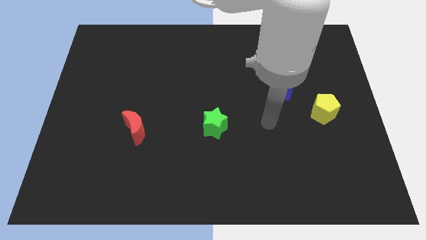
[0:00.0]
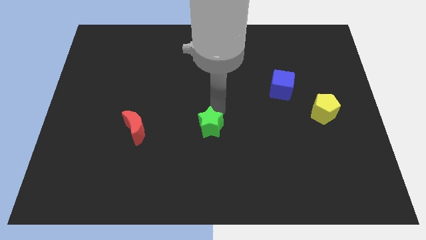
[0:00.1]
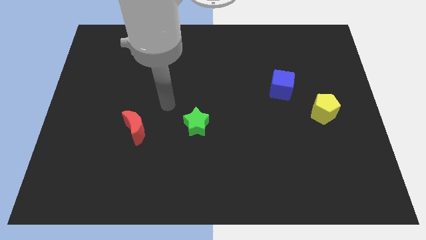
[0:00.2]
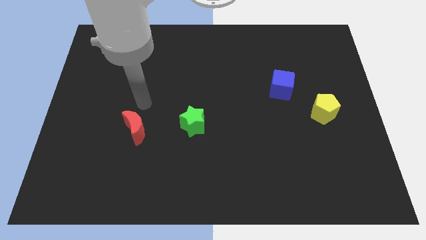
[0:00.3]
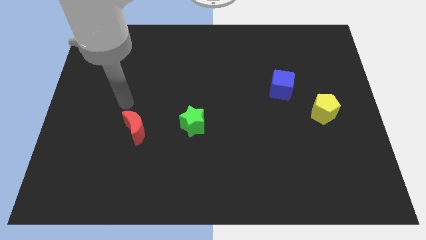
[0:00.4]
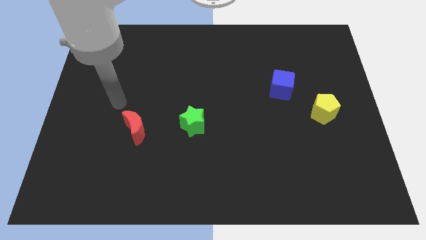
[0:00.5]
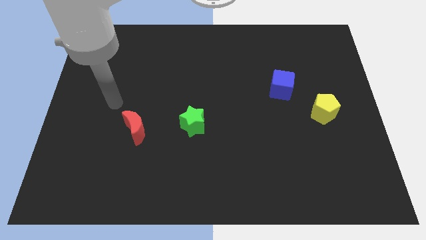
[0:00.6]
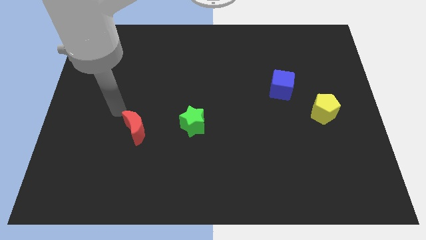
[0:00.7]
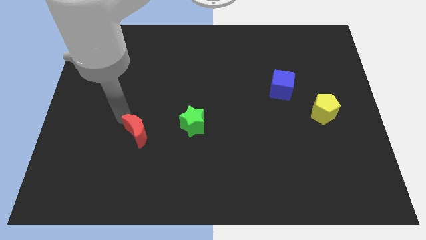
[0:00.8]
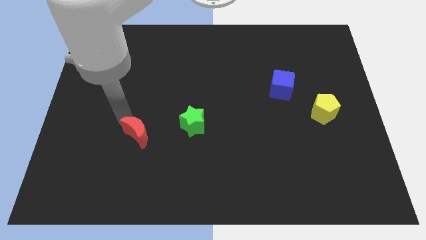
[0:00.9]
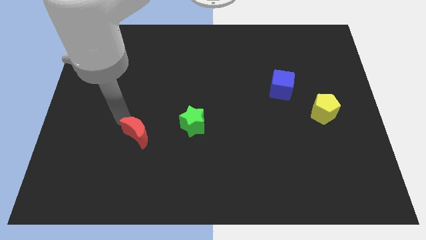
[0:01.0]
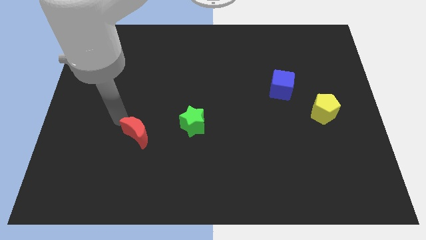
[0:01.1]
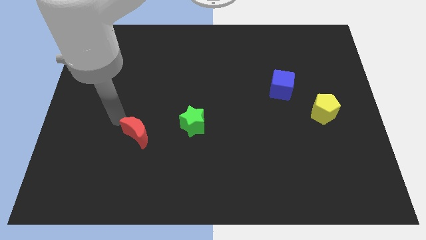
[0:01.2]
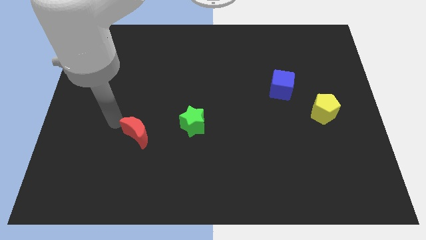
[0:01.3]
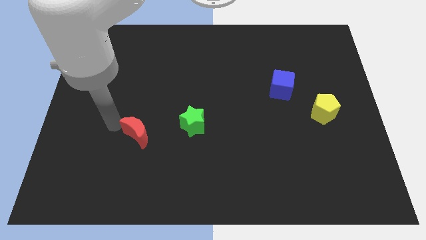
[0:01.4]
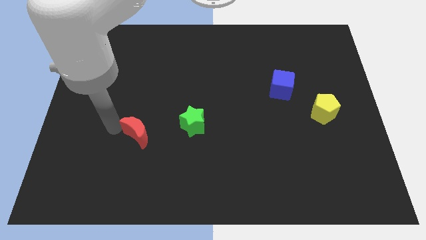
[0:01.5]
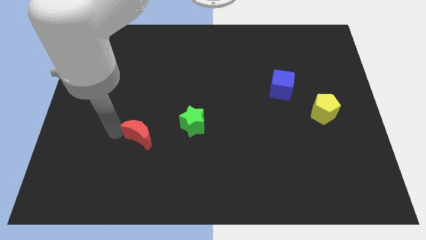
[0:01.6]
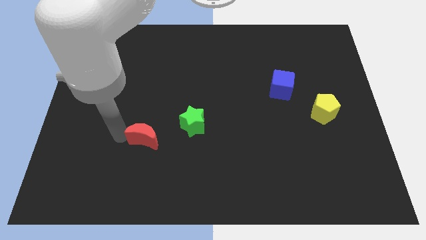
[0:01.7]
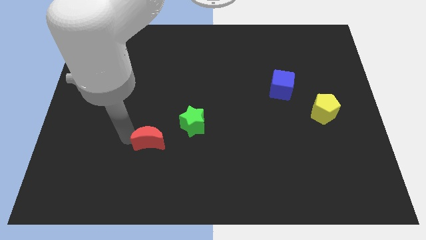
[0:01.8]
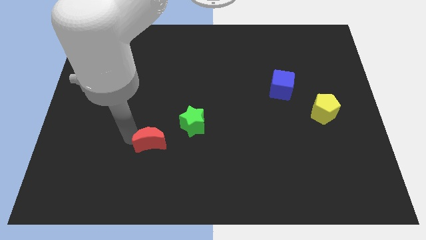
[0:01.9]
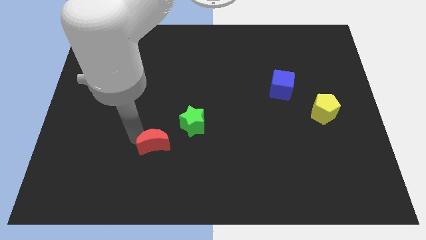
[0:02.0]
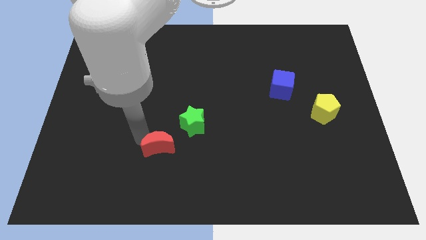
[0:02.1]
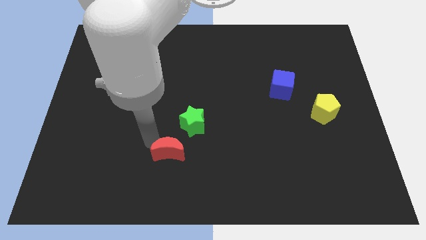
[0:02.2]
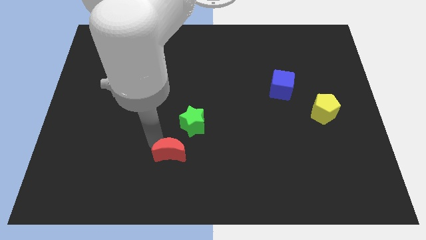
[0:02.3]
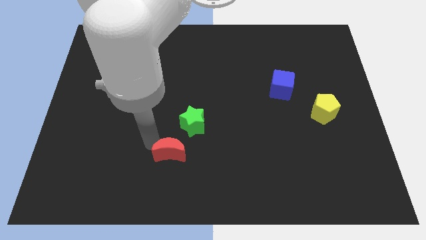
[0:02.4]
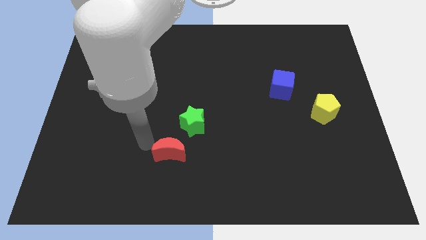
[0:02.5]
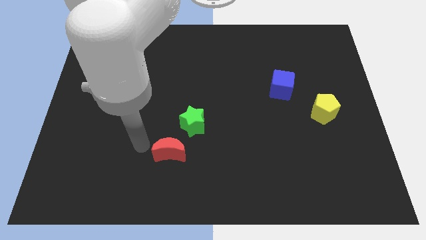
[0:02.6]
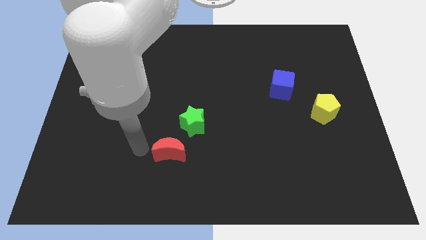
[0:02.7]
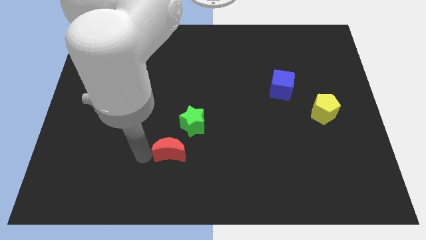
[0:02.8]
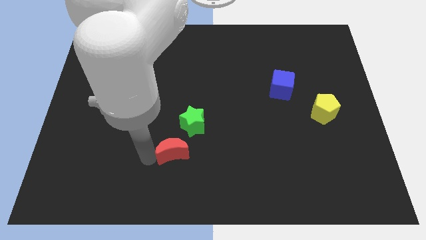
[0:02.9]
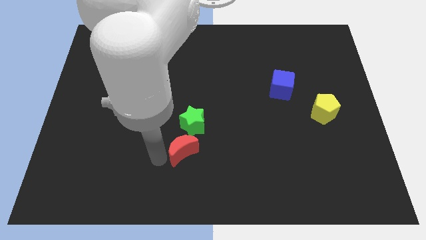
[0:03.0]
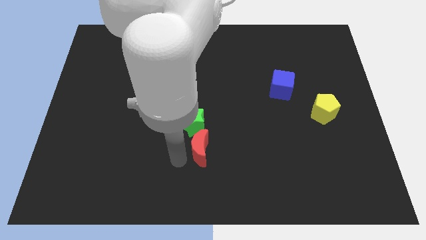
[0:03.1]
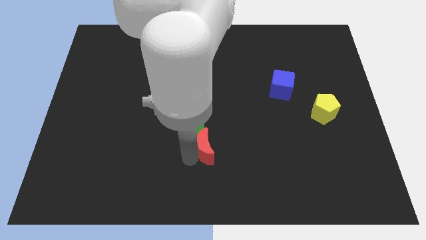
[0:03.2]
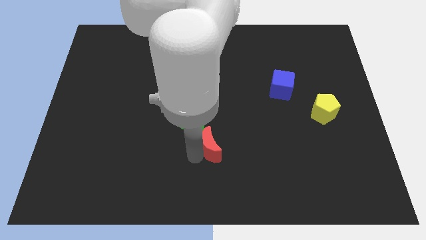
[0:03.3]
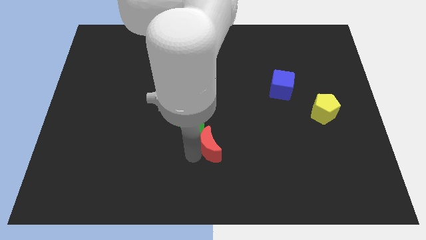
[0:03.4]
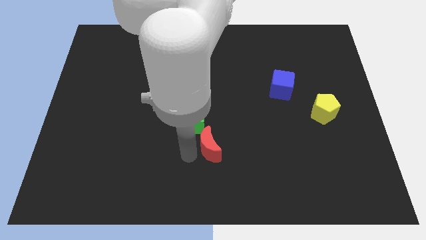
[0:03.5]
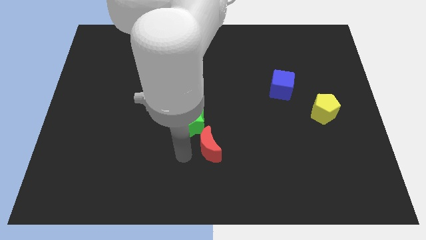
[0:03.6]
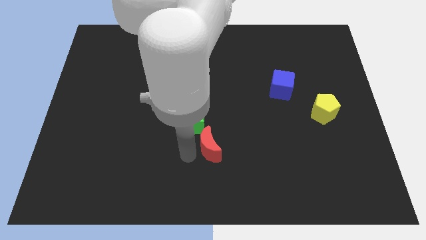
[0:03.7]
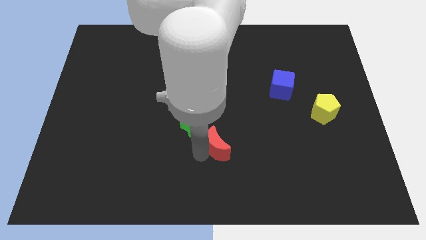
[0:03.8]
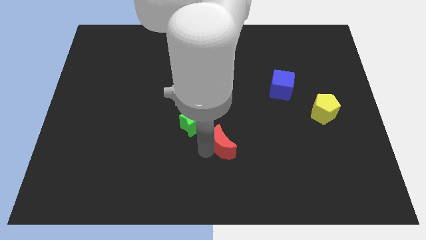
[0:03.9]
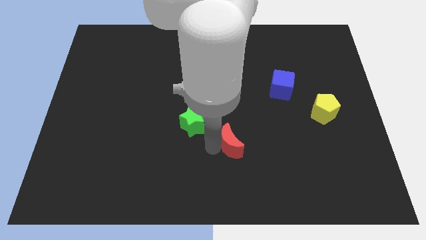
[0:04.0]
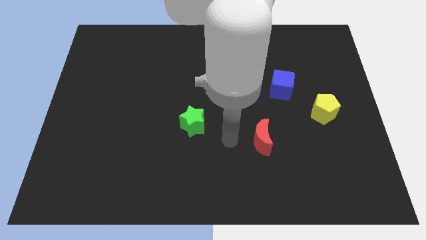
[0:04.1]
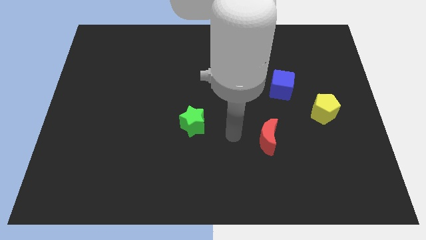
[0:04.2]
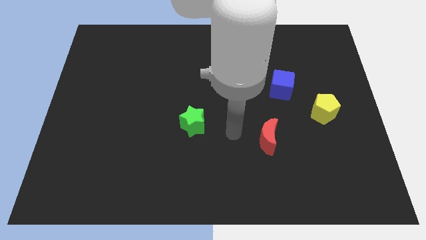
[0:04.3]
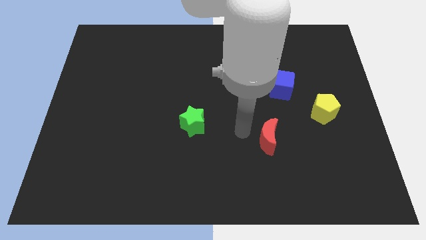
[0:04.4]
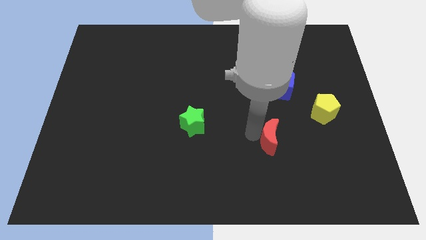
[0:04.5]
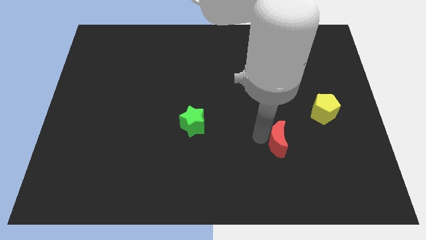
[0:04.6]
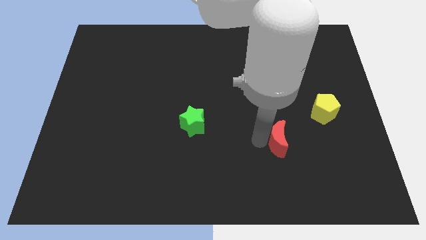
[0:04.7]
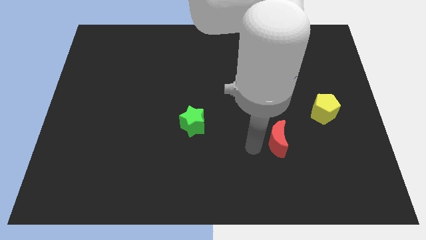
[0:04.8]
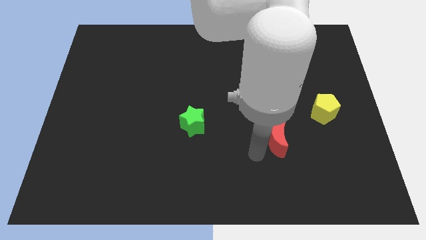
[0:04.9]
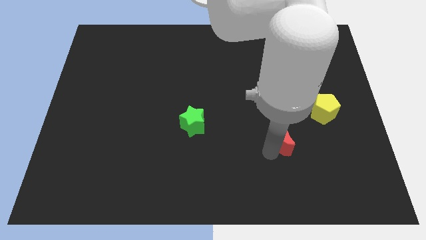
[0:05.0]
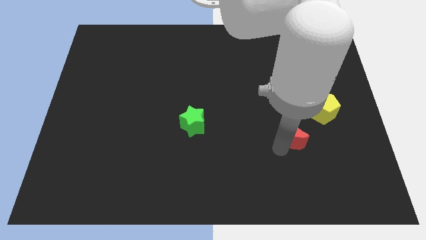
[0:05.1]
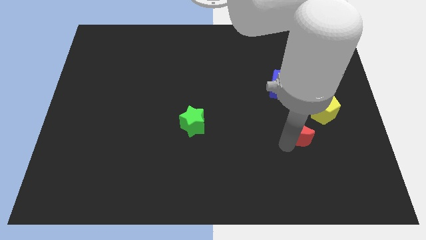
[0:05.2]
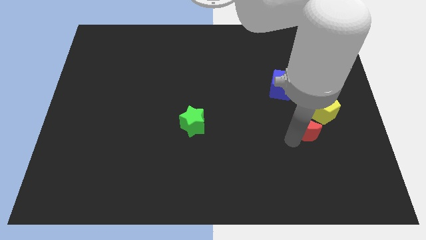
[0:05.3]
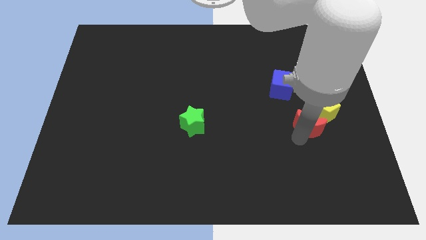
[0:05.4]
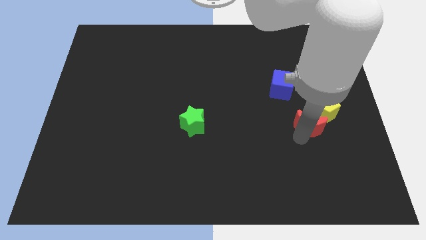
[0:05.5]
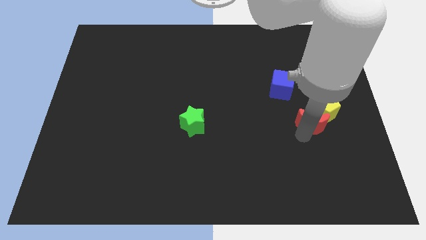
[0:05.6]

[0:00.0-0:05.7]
slide the moon close to the yellow block

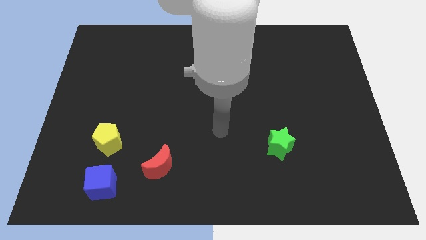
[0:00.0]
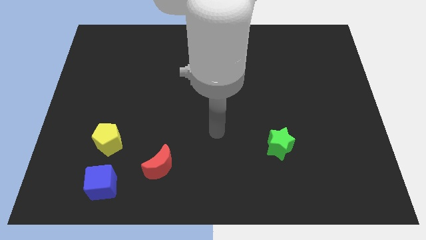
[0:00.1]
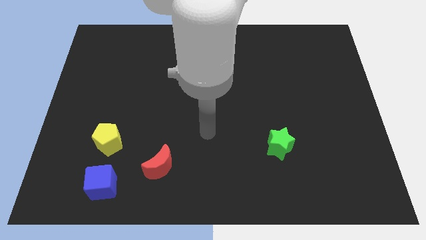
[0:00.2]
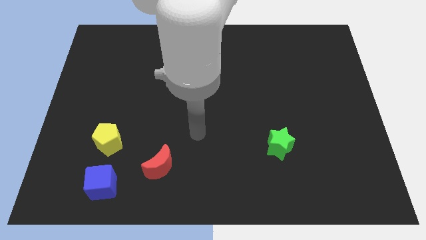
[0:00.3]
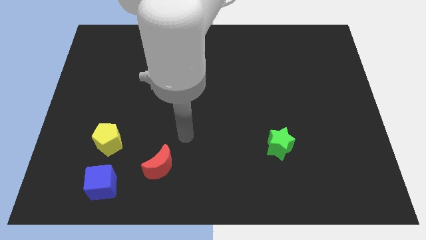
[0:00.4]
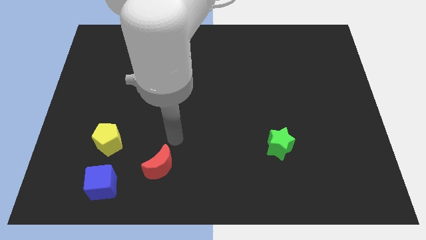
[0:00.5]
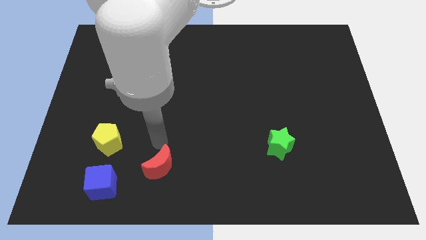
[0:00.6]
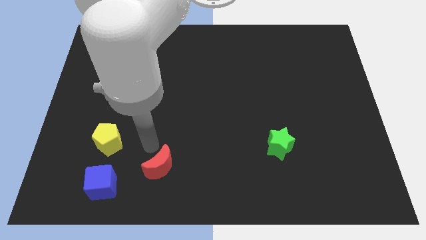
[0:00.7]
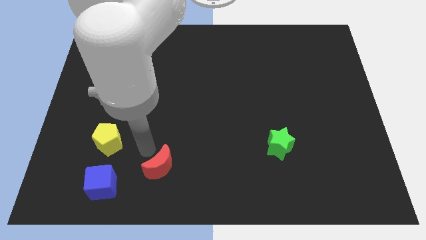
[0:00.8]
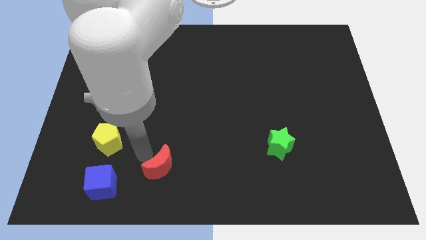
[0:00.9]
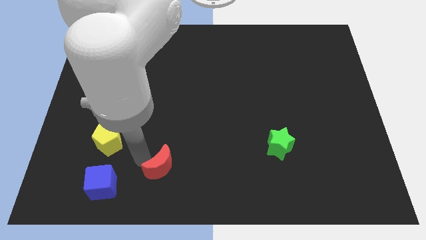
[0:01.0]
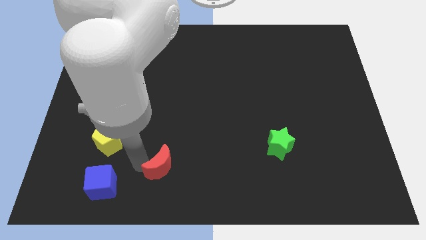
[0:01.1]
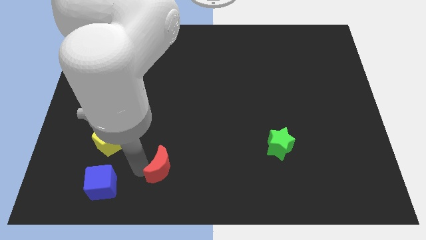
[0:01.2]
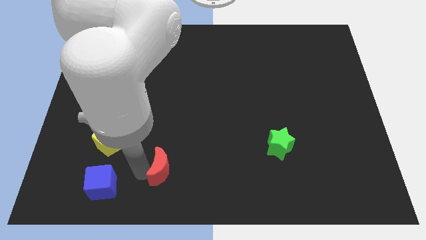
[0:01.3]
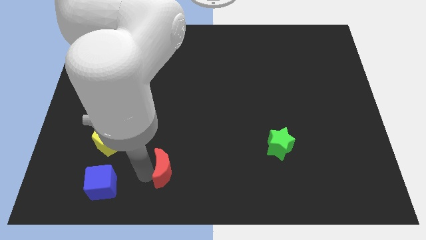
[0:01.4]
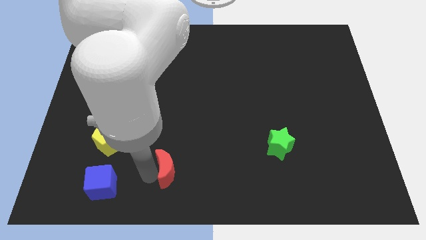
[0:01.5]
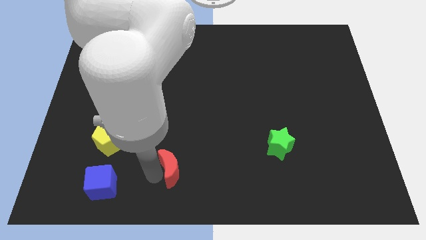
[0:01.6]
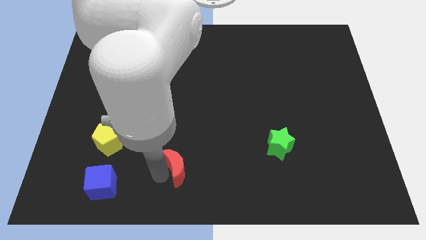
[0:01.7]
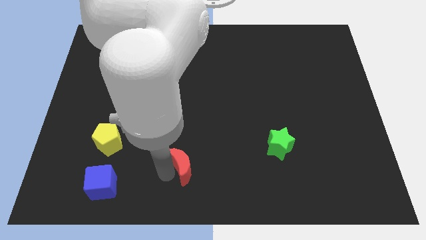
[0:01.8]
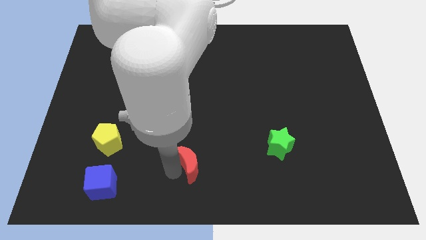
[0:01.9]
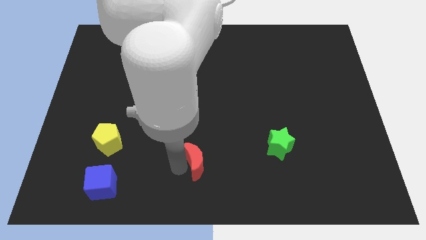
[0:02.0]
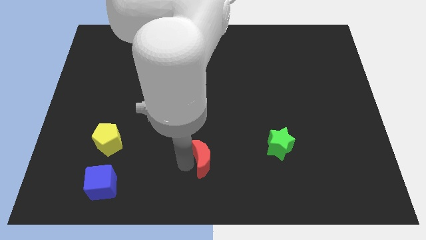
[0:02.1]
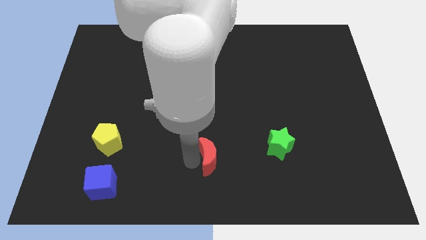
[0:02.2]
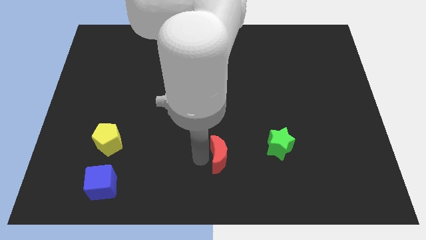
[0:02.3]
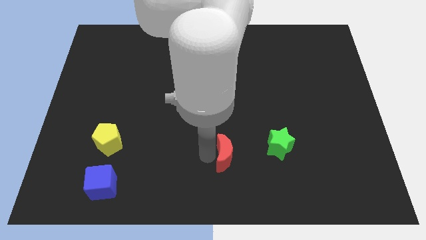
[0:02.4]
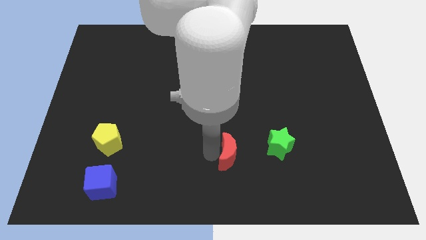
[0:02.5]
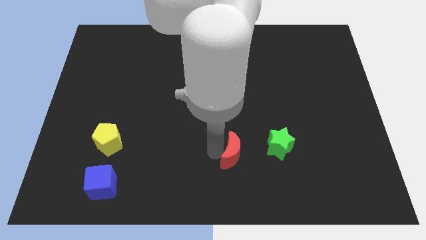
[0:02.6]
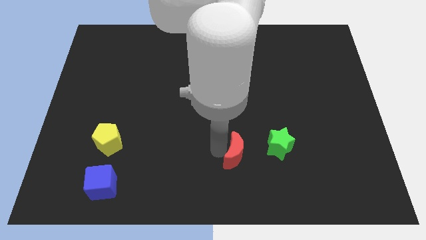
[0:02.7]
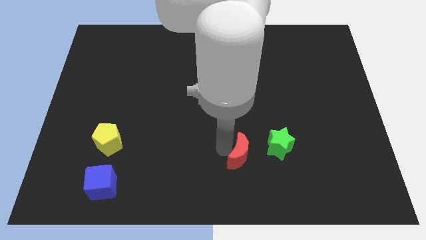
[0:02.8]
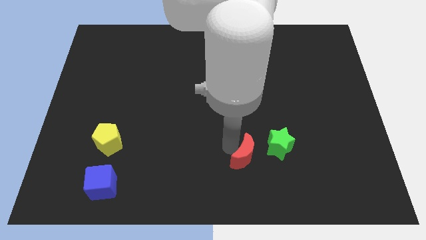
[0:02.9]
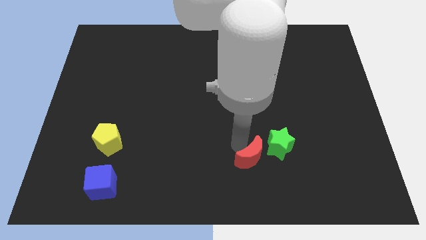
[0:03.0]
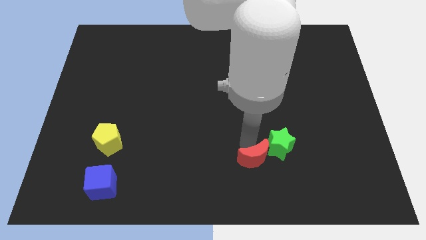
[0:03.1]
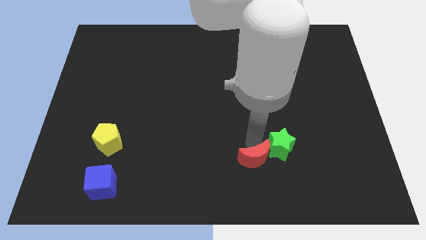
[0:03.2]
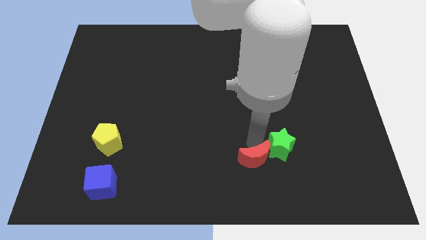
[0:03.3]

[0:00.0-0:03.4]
put the moon to the star
